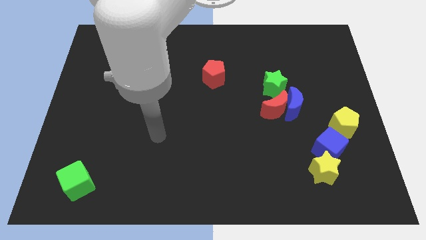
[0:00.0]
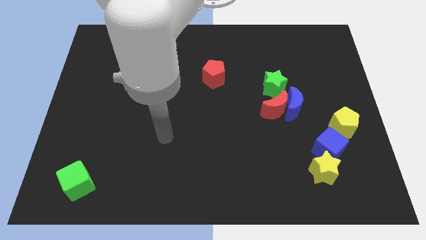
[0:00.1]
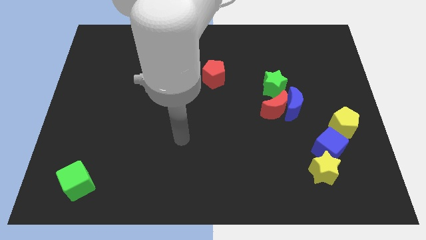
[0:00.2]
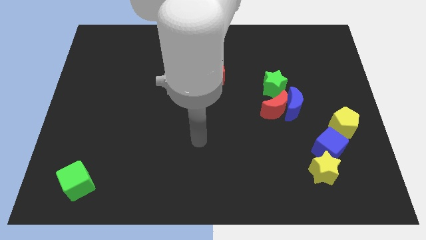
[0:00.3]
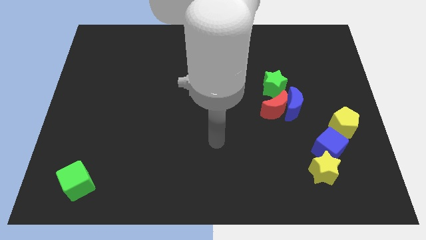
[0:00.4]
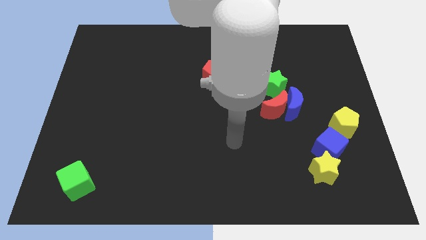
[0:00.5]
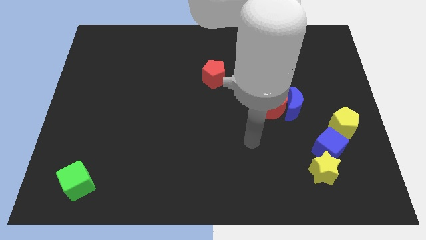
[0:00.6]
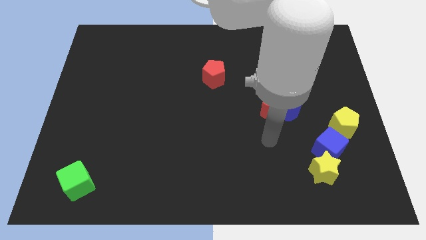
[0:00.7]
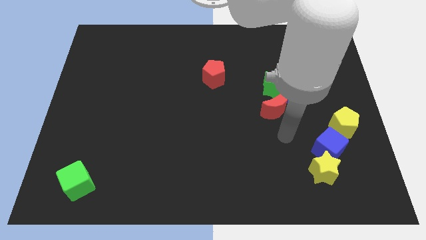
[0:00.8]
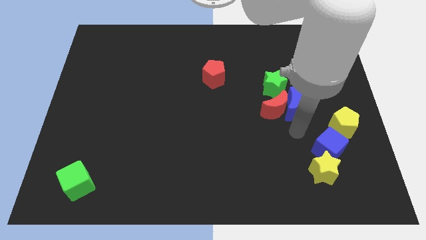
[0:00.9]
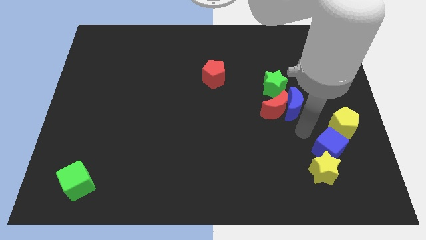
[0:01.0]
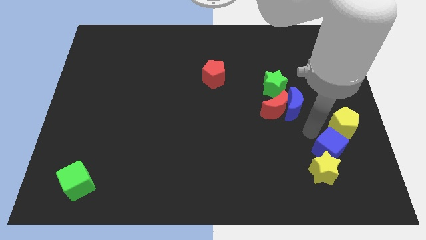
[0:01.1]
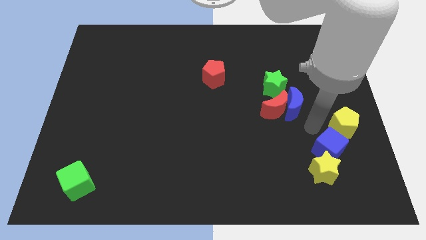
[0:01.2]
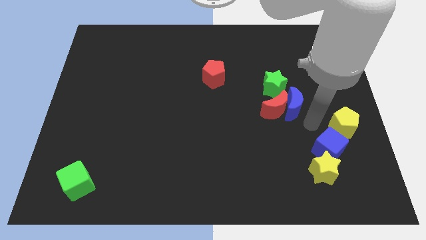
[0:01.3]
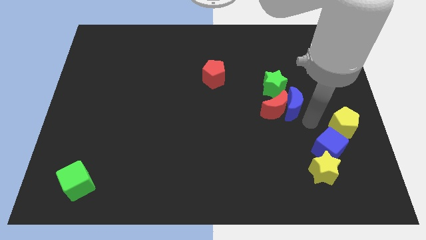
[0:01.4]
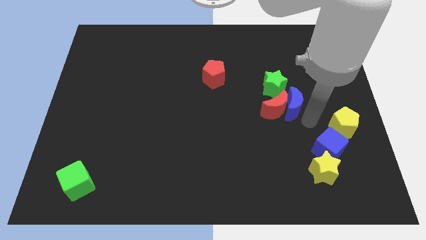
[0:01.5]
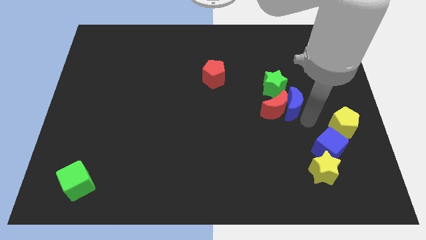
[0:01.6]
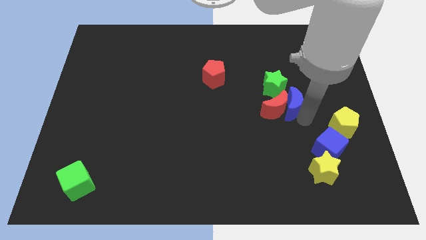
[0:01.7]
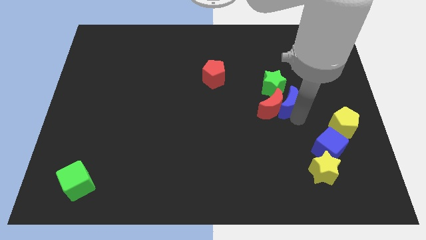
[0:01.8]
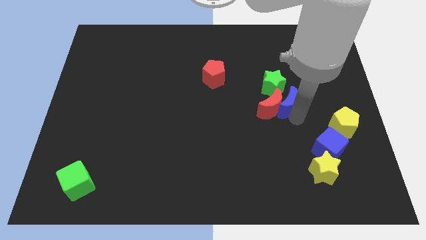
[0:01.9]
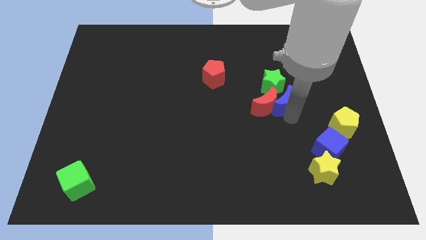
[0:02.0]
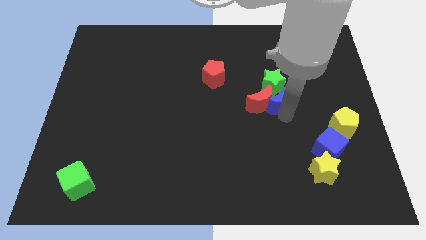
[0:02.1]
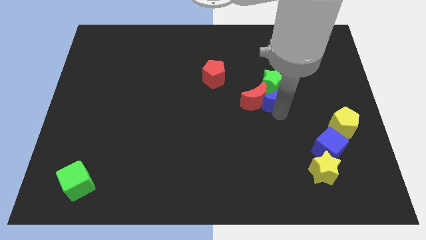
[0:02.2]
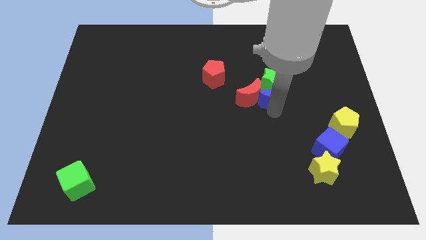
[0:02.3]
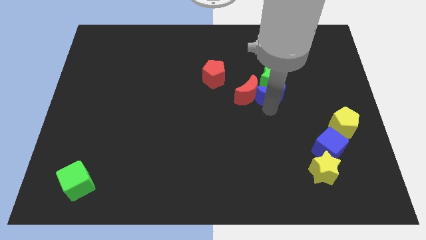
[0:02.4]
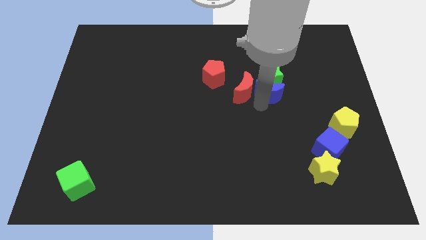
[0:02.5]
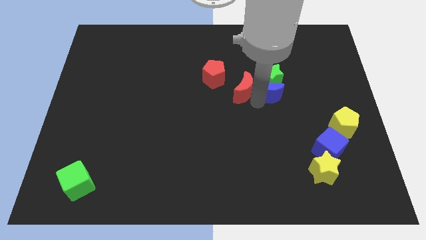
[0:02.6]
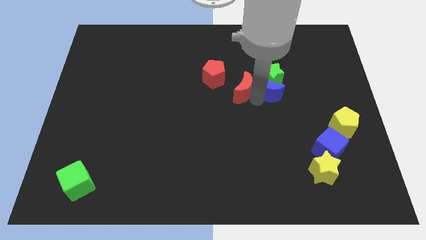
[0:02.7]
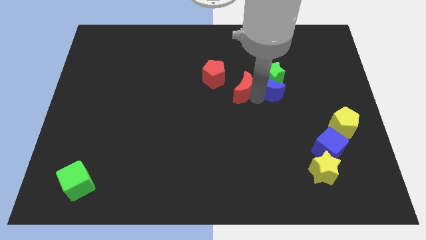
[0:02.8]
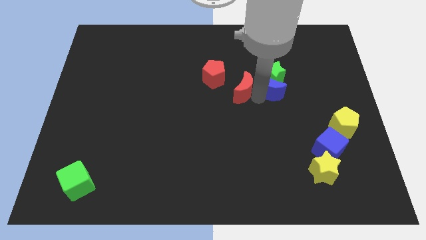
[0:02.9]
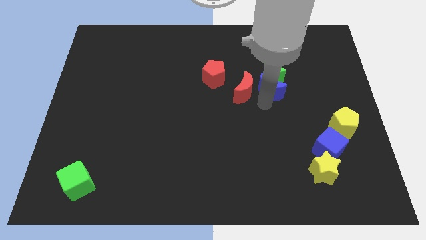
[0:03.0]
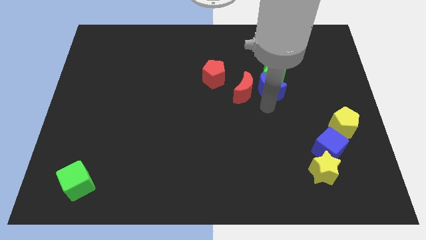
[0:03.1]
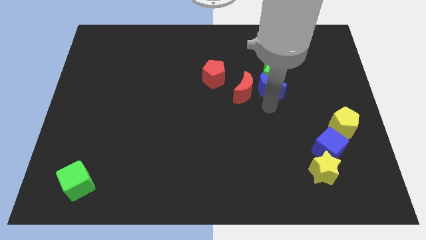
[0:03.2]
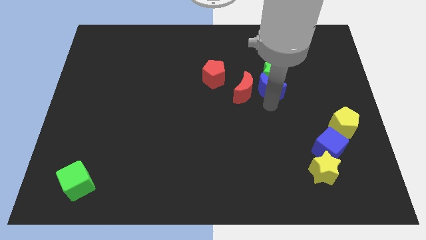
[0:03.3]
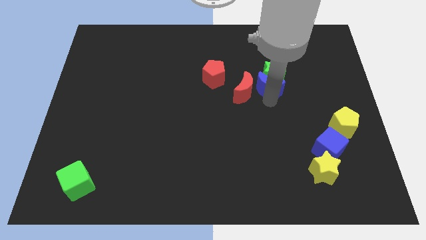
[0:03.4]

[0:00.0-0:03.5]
place blue moon below green star

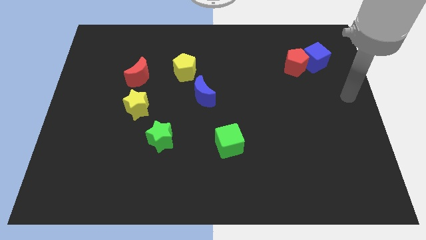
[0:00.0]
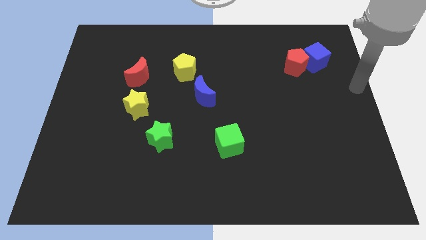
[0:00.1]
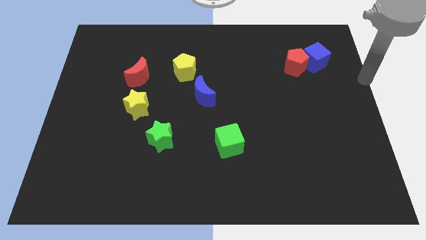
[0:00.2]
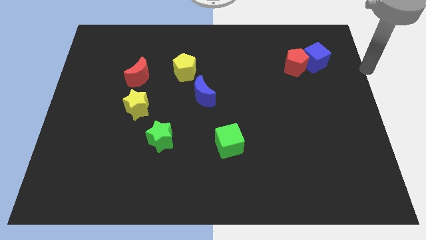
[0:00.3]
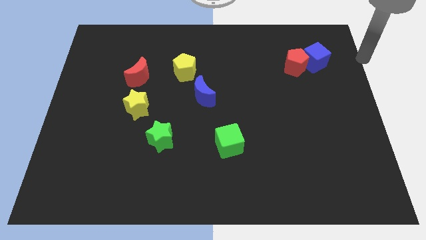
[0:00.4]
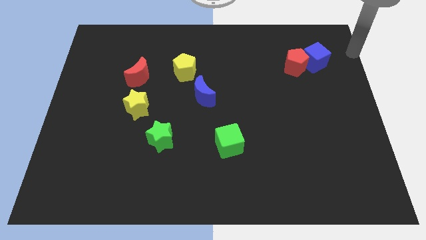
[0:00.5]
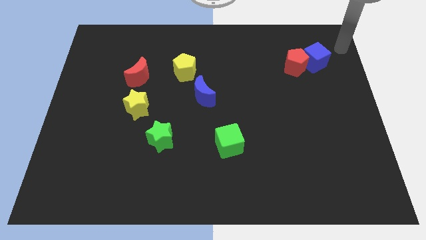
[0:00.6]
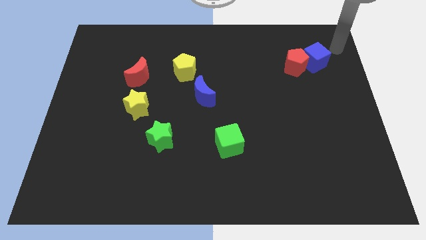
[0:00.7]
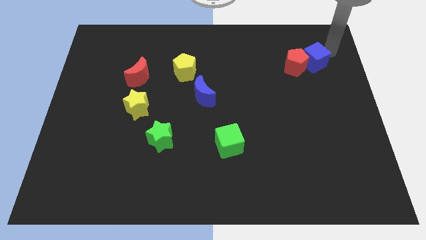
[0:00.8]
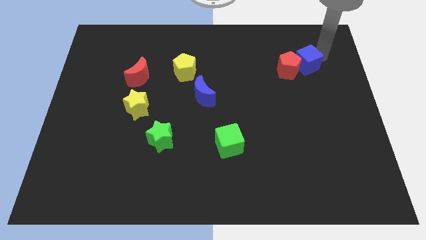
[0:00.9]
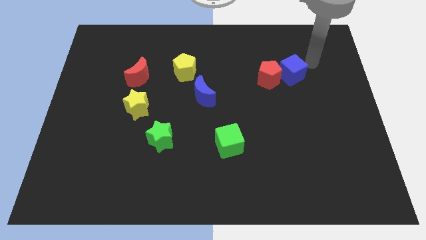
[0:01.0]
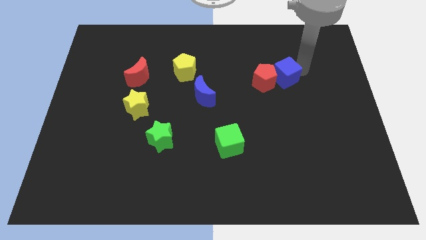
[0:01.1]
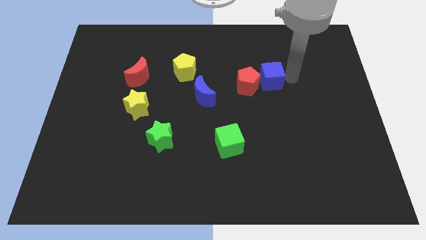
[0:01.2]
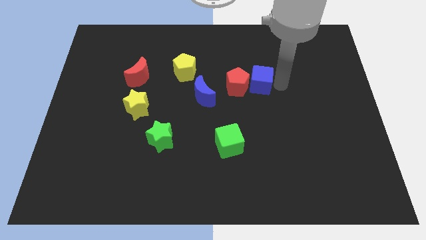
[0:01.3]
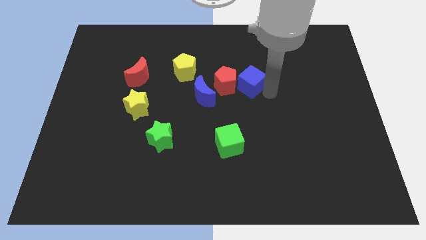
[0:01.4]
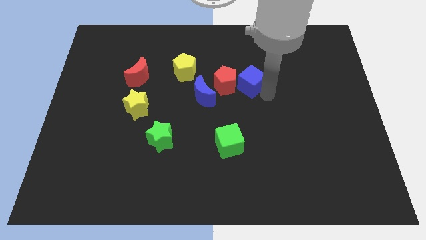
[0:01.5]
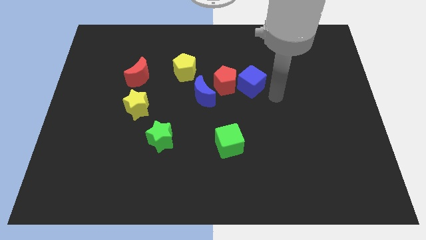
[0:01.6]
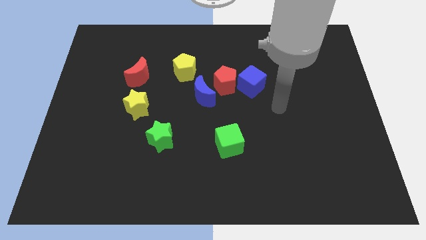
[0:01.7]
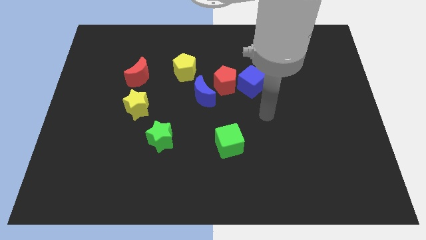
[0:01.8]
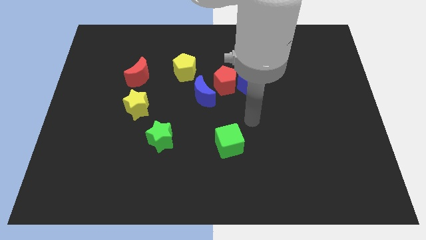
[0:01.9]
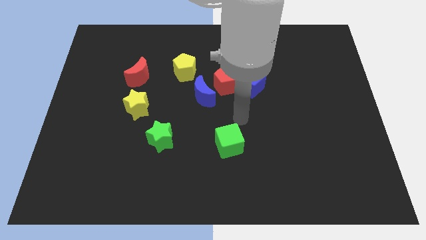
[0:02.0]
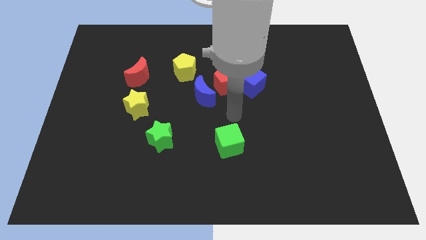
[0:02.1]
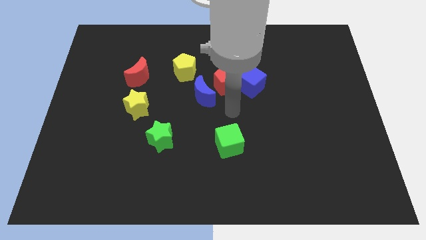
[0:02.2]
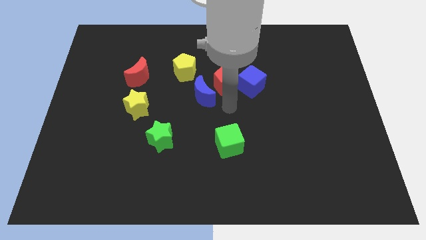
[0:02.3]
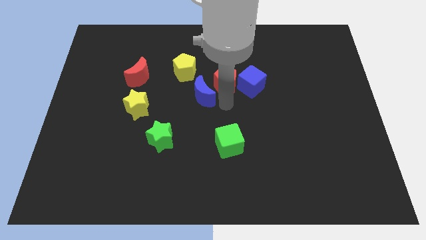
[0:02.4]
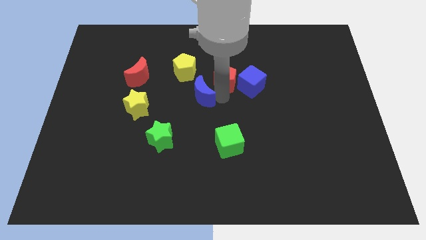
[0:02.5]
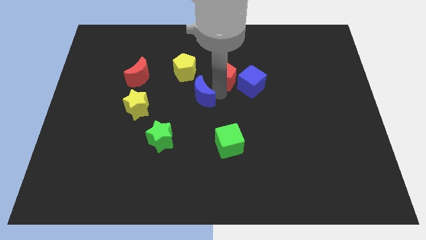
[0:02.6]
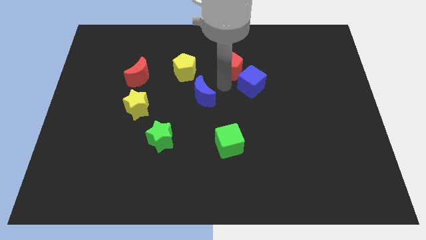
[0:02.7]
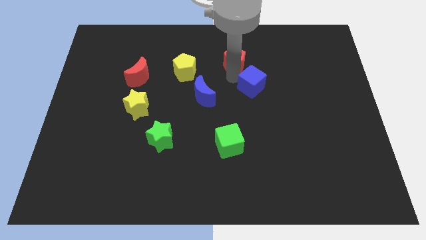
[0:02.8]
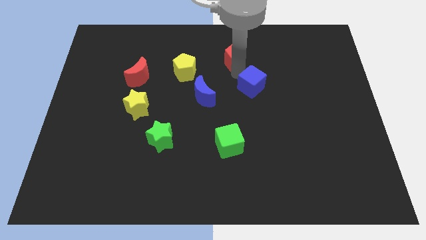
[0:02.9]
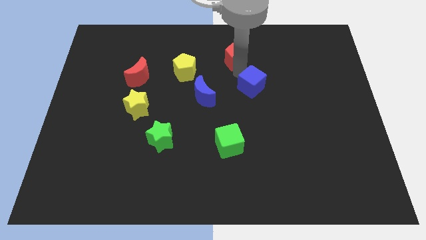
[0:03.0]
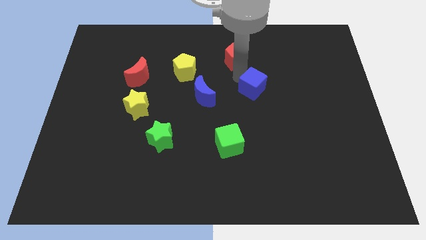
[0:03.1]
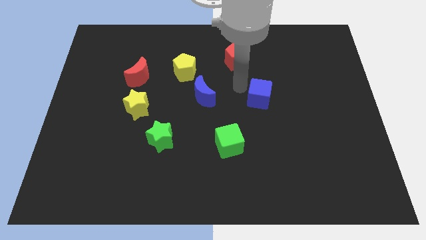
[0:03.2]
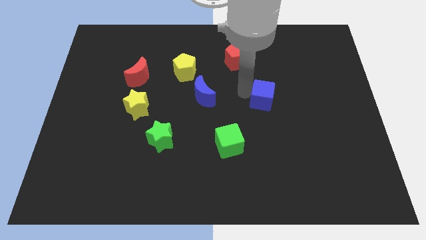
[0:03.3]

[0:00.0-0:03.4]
place the red pentagon to the right of the yellow pentagon

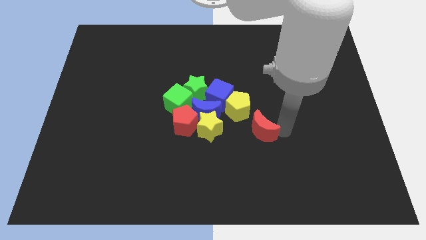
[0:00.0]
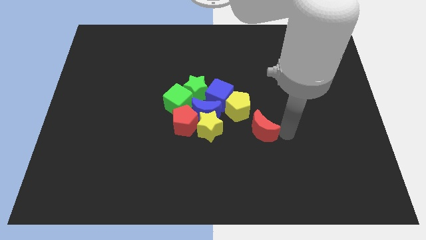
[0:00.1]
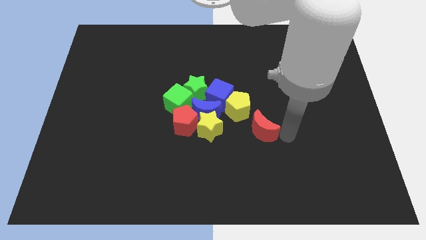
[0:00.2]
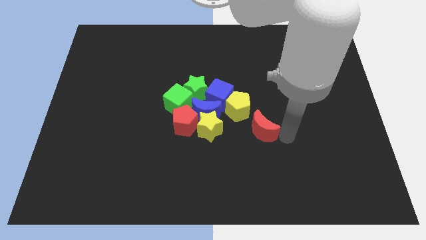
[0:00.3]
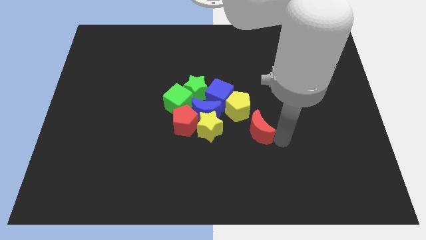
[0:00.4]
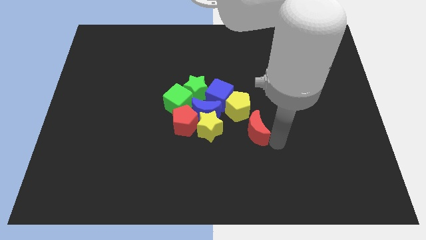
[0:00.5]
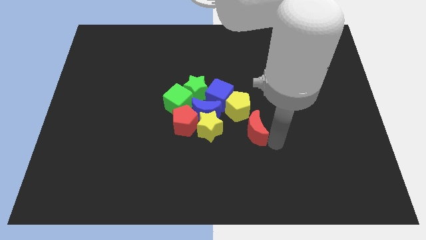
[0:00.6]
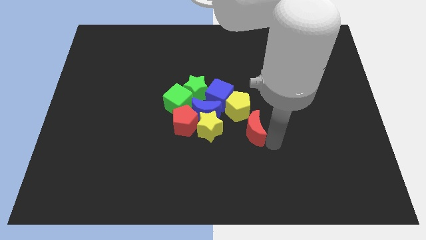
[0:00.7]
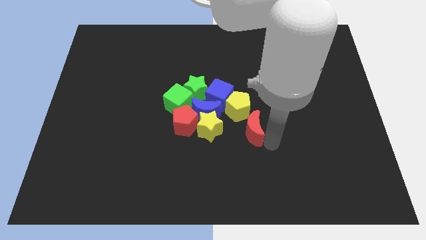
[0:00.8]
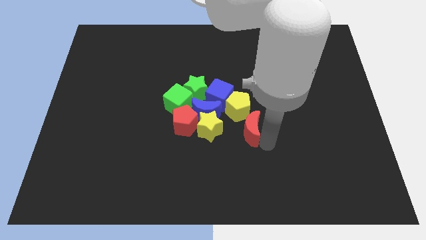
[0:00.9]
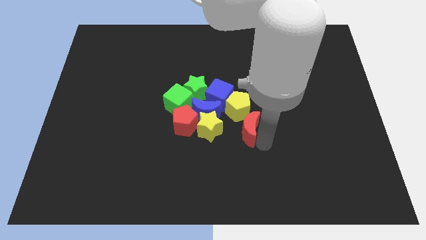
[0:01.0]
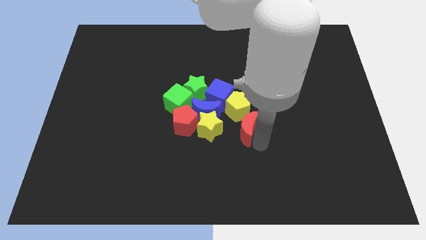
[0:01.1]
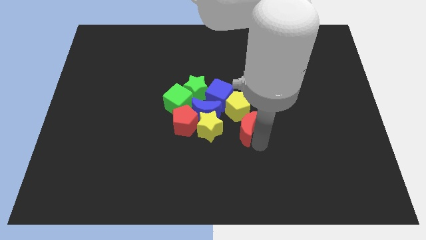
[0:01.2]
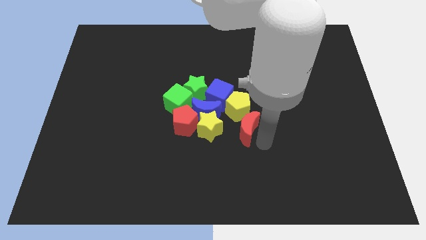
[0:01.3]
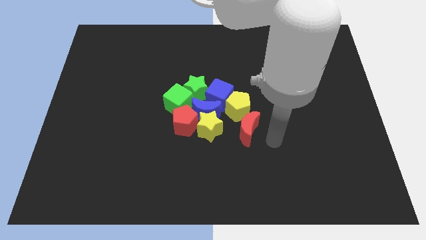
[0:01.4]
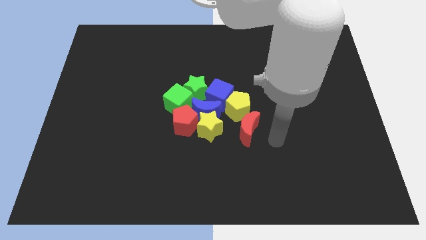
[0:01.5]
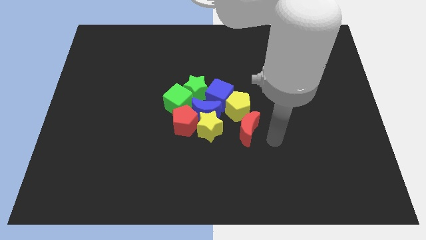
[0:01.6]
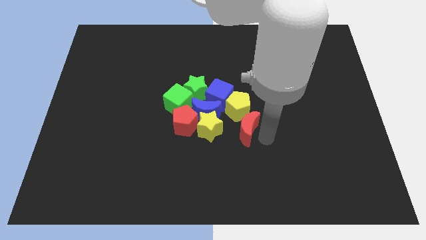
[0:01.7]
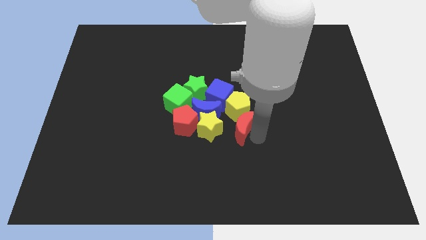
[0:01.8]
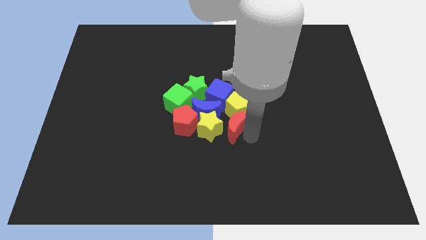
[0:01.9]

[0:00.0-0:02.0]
place the red moon below the yellow pentagon

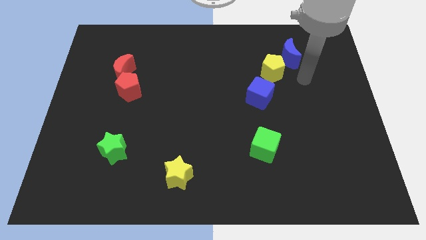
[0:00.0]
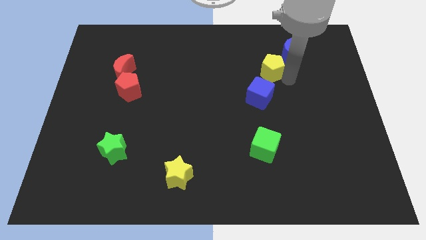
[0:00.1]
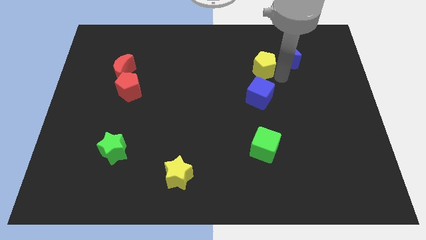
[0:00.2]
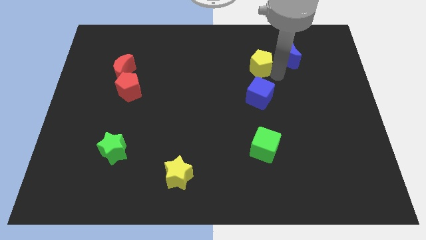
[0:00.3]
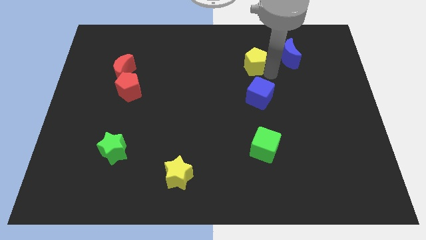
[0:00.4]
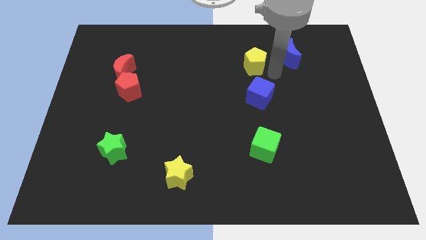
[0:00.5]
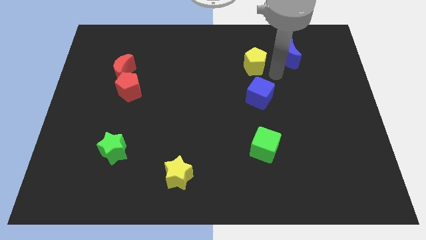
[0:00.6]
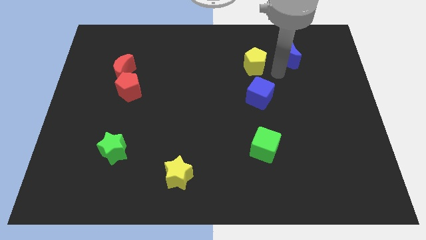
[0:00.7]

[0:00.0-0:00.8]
push yellow pentagon slightly to the left
